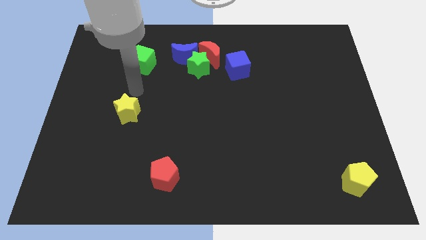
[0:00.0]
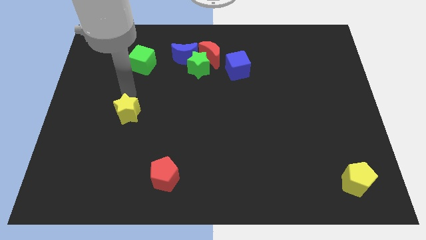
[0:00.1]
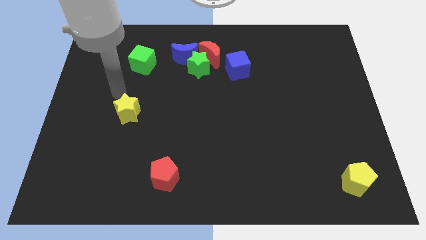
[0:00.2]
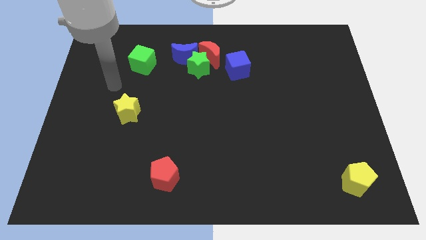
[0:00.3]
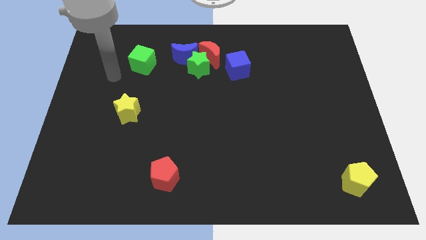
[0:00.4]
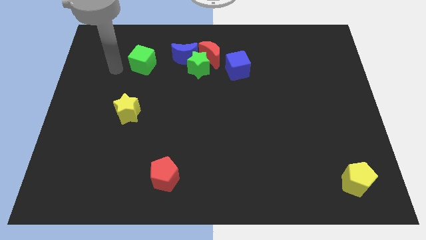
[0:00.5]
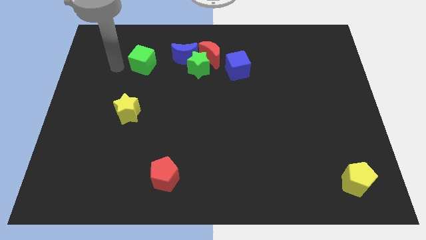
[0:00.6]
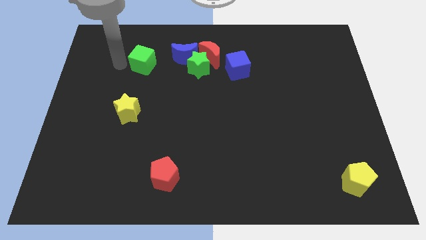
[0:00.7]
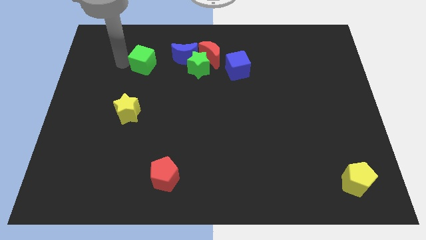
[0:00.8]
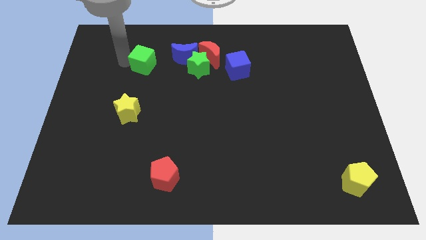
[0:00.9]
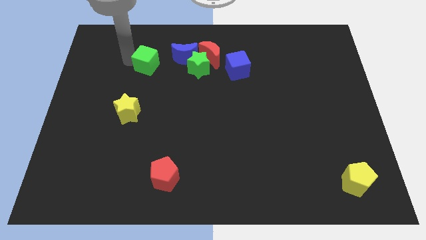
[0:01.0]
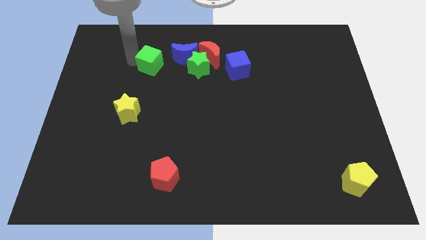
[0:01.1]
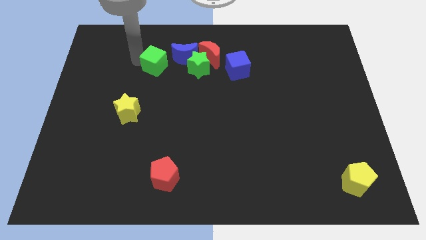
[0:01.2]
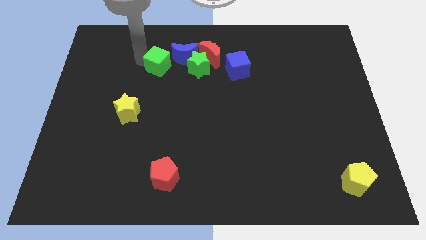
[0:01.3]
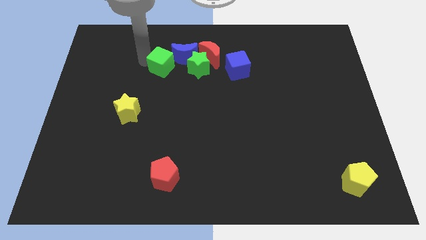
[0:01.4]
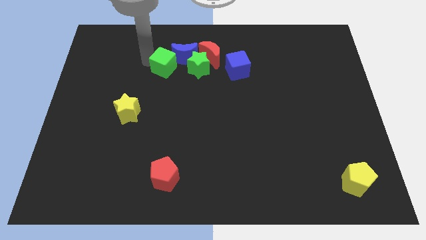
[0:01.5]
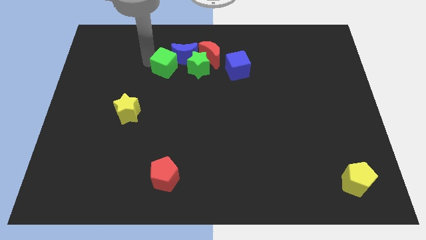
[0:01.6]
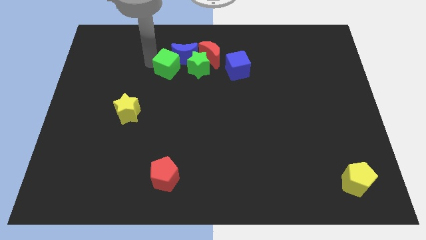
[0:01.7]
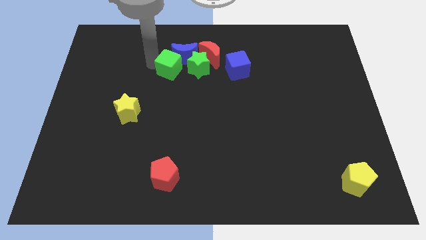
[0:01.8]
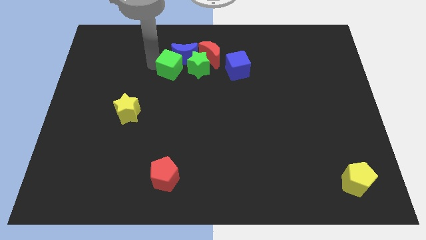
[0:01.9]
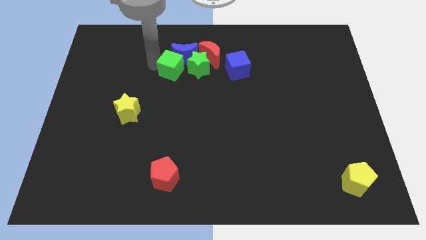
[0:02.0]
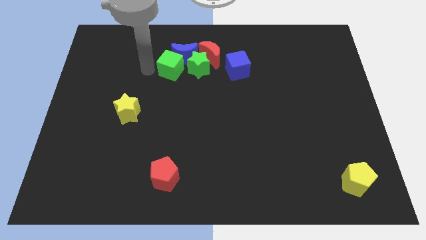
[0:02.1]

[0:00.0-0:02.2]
move green cube below the blue crescent

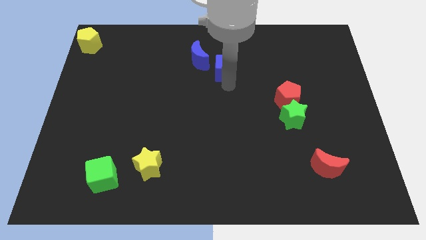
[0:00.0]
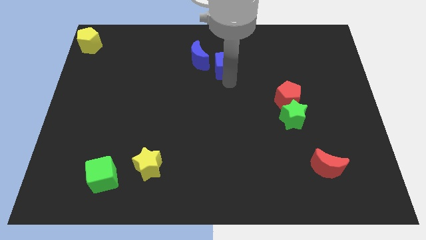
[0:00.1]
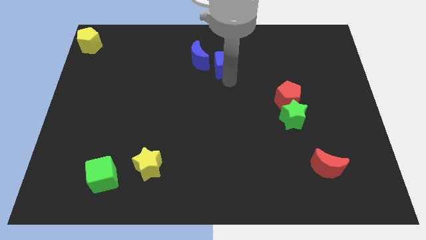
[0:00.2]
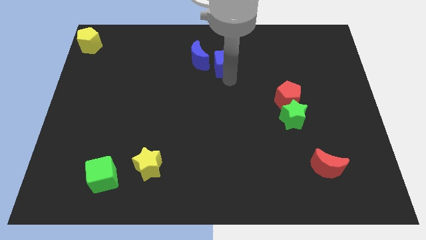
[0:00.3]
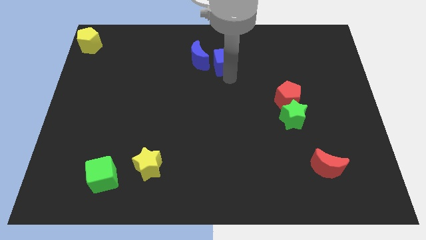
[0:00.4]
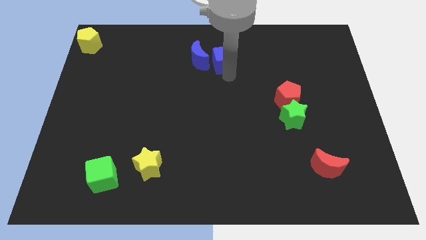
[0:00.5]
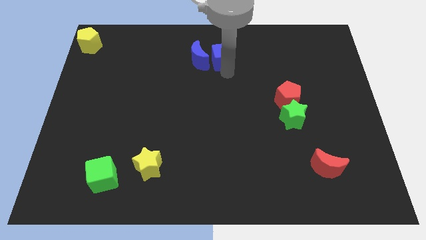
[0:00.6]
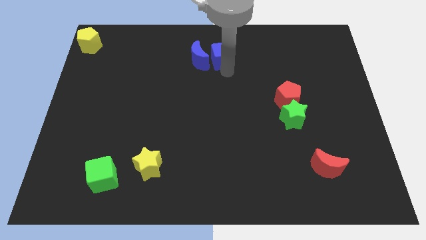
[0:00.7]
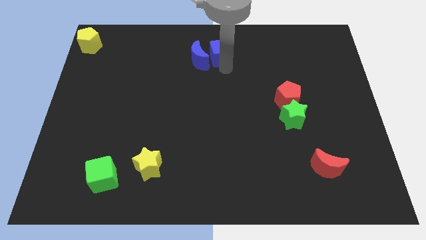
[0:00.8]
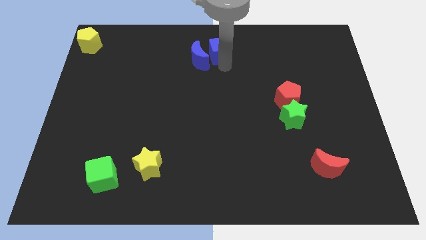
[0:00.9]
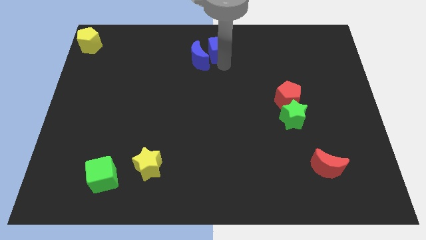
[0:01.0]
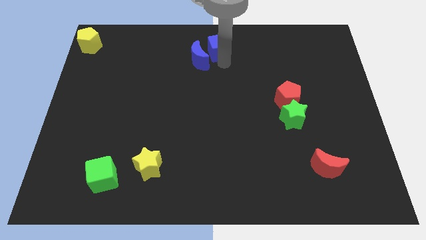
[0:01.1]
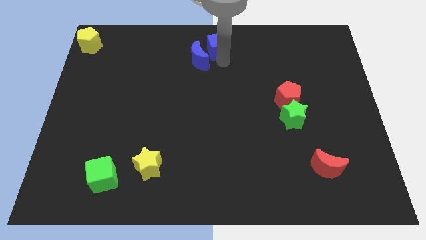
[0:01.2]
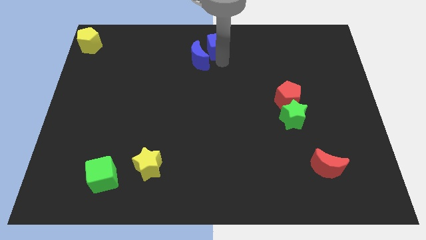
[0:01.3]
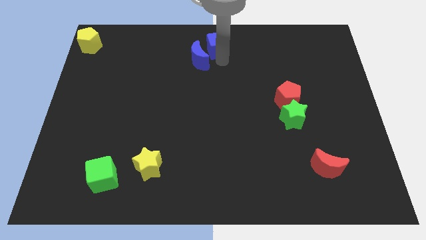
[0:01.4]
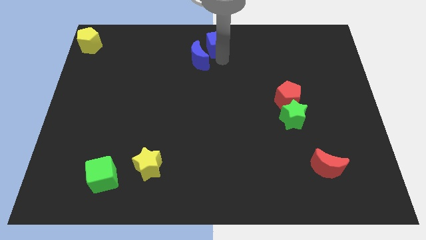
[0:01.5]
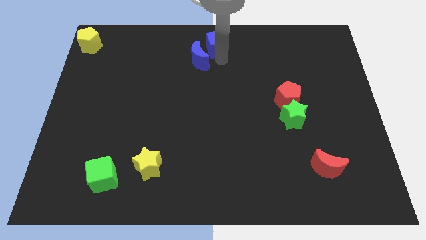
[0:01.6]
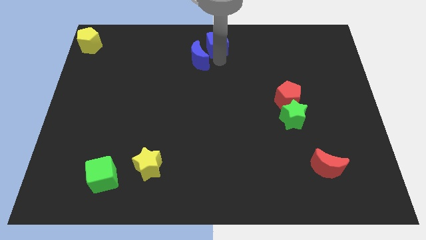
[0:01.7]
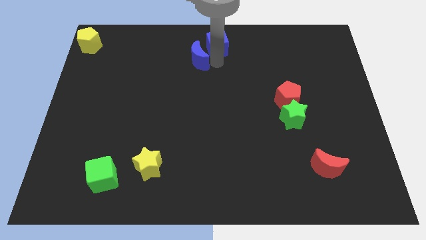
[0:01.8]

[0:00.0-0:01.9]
place blue cube beside blue moon

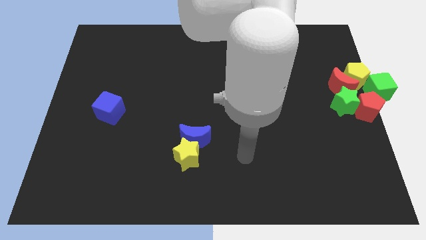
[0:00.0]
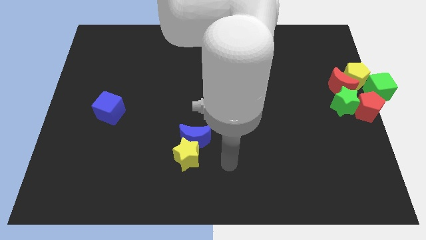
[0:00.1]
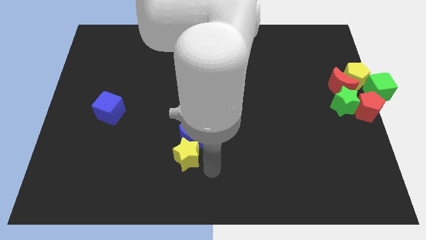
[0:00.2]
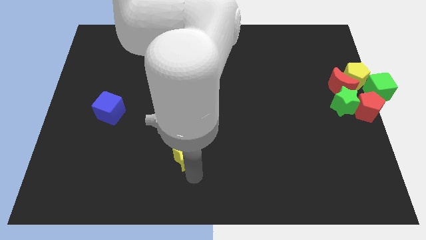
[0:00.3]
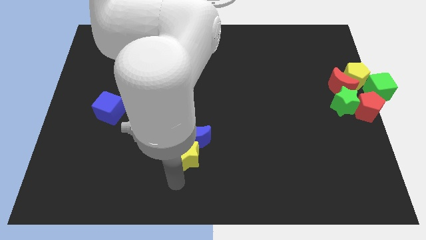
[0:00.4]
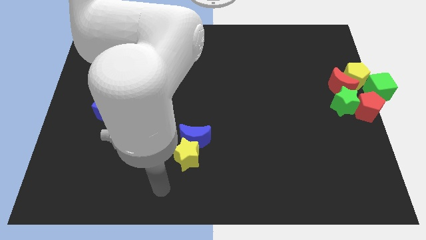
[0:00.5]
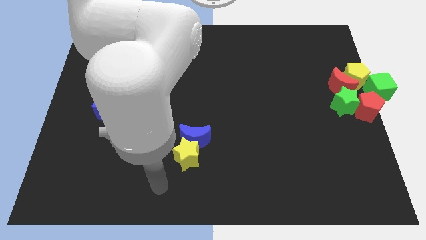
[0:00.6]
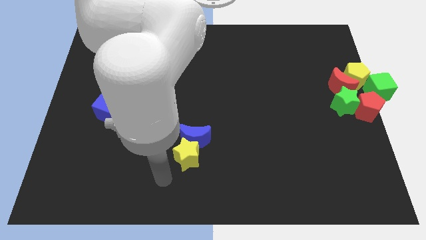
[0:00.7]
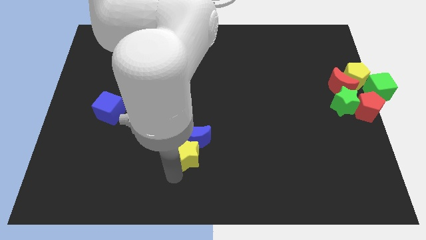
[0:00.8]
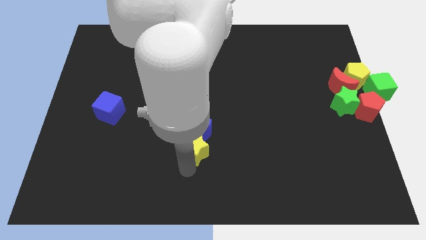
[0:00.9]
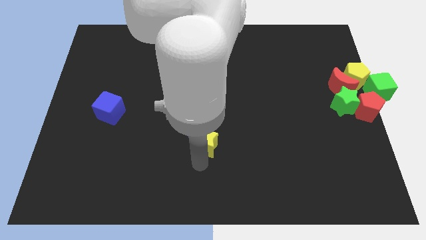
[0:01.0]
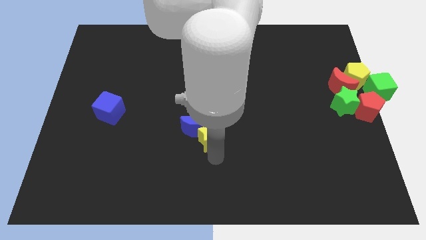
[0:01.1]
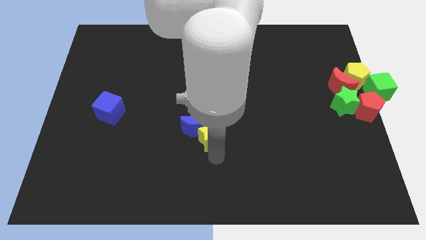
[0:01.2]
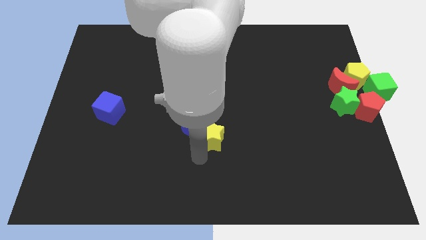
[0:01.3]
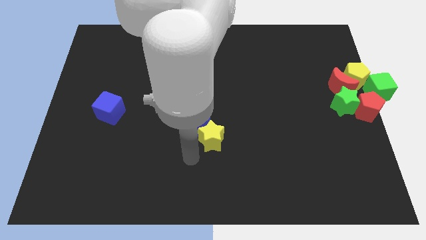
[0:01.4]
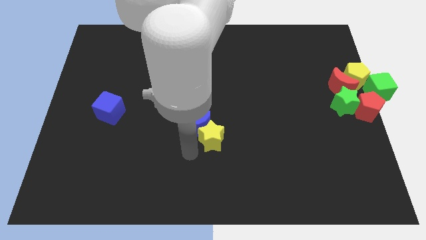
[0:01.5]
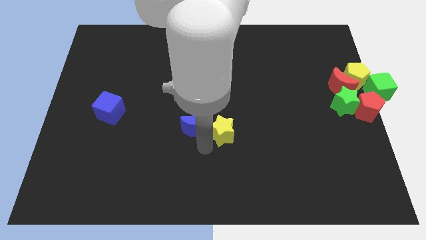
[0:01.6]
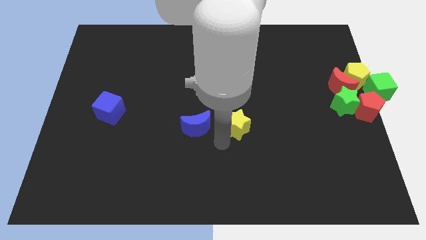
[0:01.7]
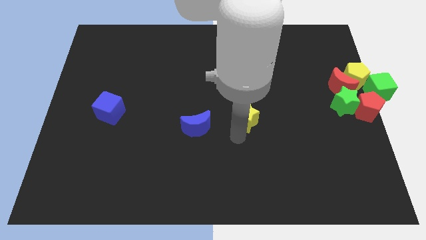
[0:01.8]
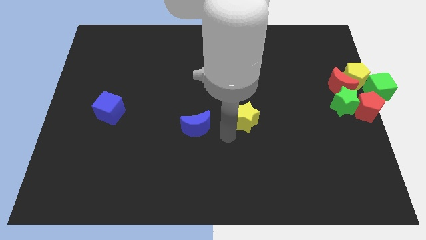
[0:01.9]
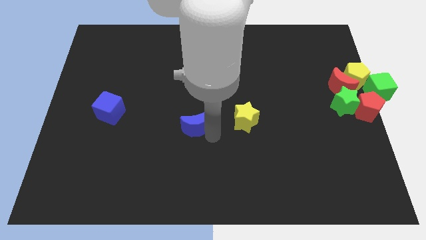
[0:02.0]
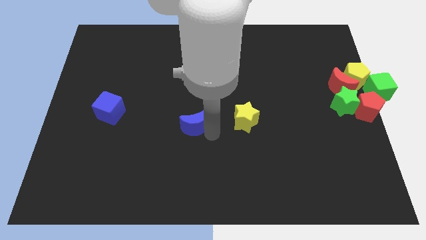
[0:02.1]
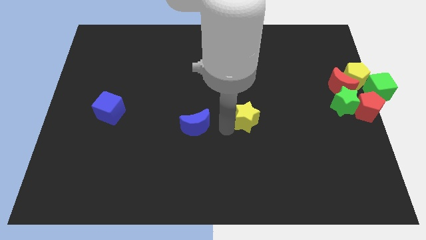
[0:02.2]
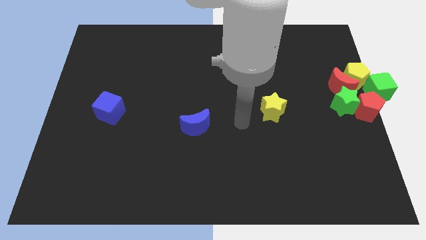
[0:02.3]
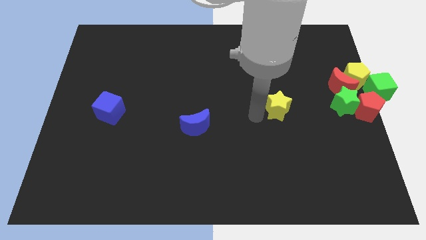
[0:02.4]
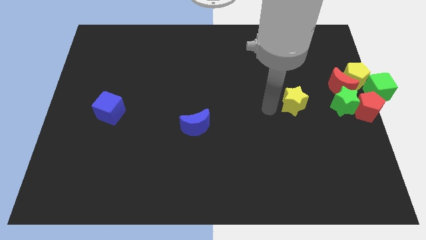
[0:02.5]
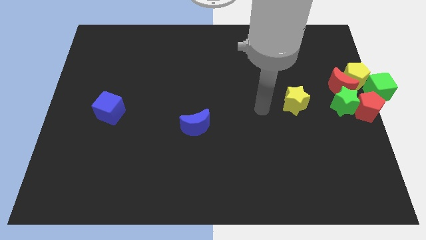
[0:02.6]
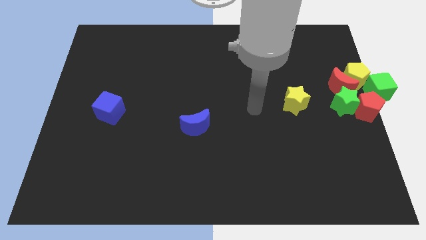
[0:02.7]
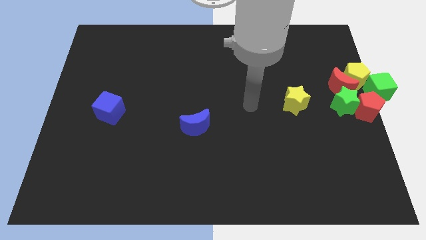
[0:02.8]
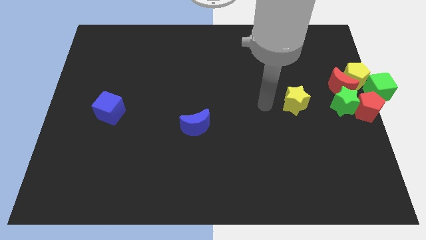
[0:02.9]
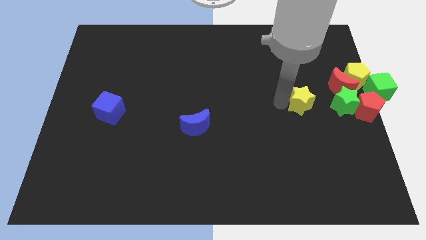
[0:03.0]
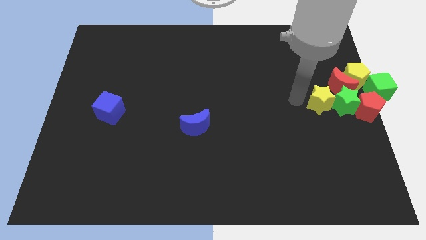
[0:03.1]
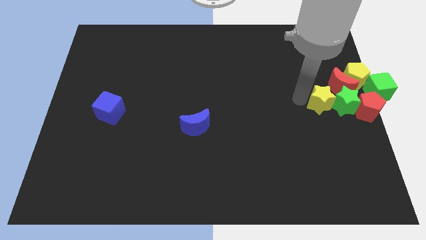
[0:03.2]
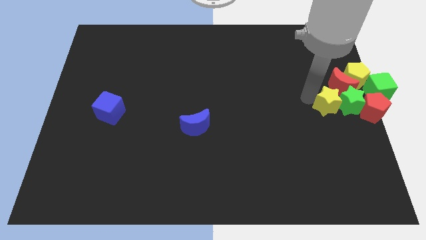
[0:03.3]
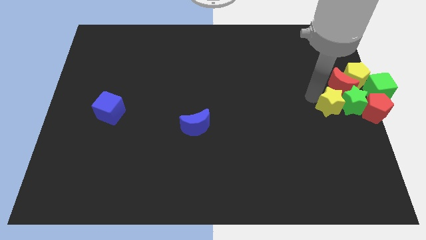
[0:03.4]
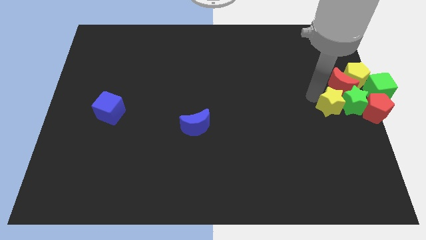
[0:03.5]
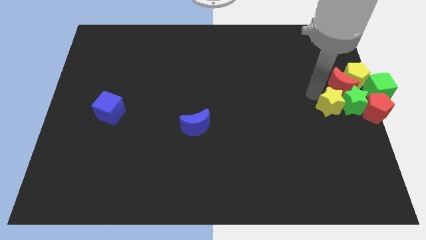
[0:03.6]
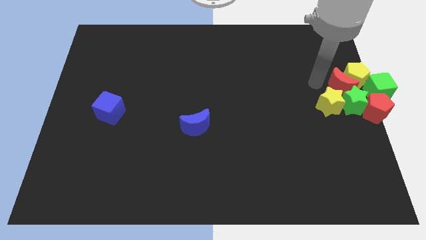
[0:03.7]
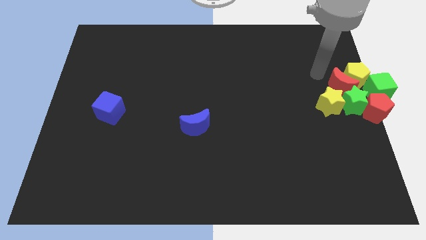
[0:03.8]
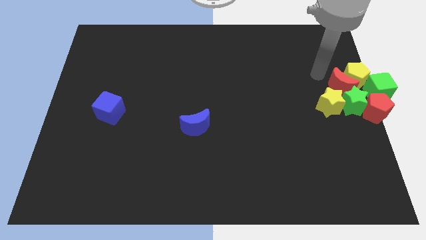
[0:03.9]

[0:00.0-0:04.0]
move the yellow star into the green star

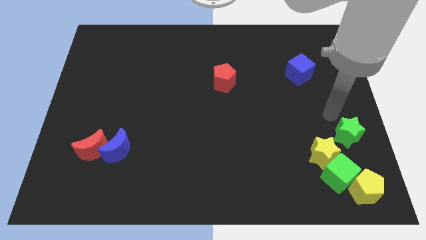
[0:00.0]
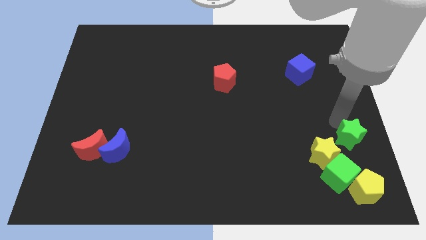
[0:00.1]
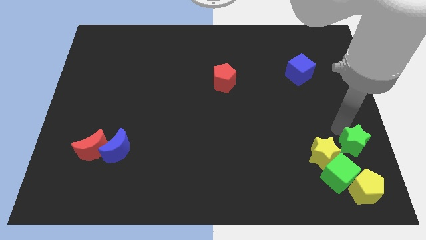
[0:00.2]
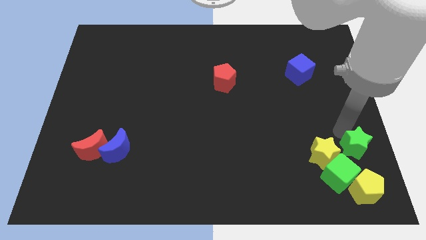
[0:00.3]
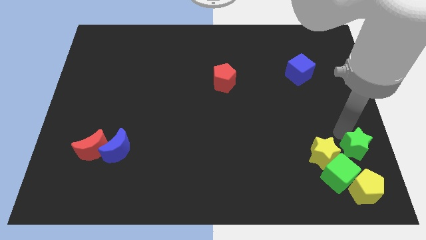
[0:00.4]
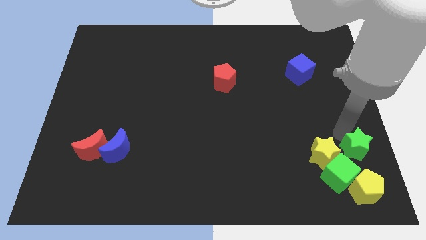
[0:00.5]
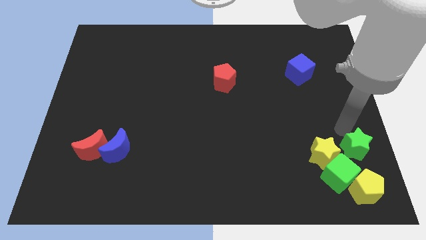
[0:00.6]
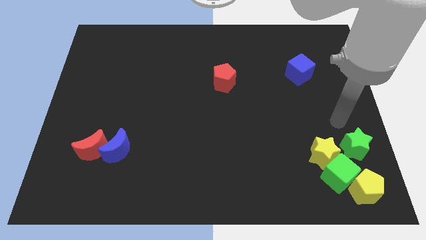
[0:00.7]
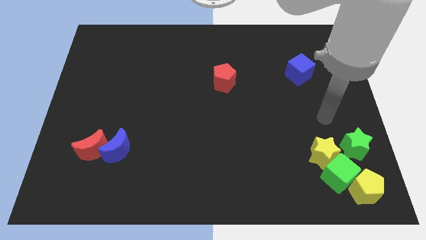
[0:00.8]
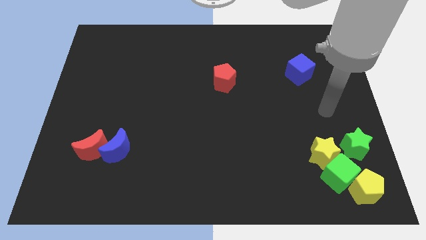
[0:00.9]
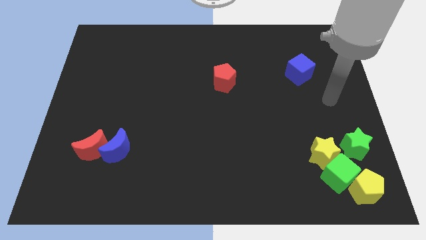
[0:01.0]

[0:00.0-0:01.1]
place the green star right to yellow star
